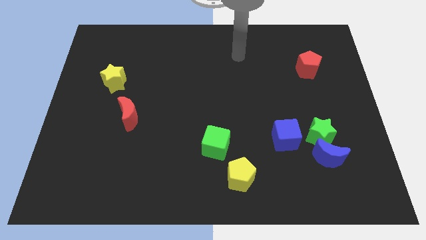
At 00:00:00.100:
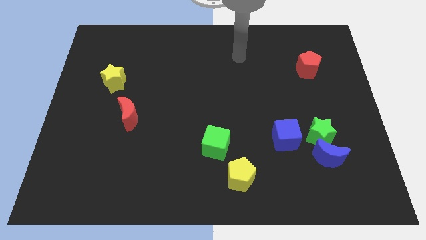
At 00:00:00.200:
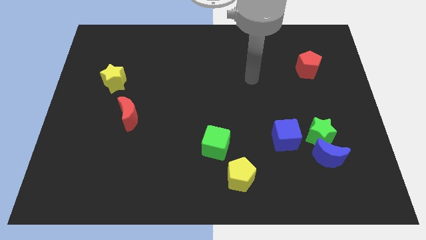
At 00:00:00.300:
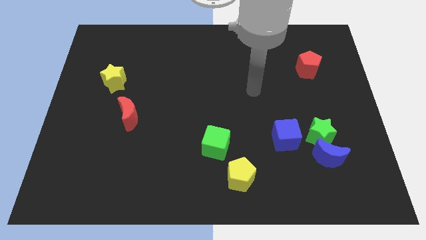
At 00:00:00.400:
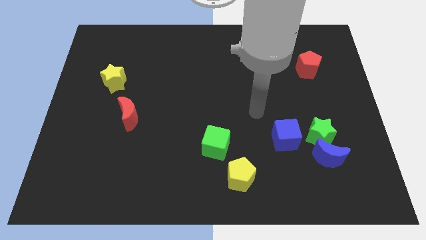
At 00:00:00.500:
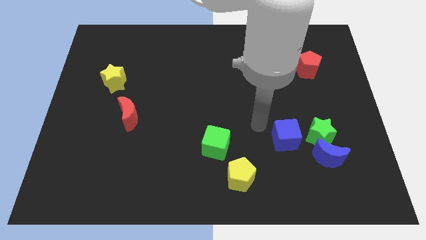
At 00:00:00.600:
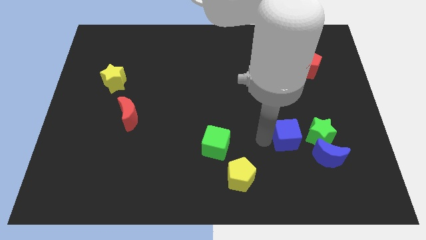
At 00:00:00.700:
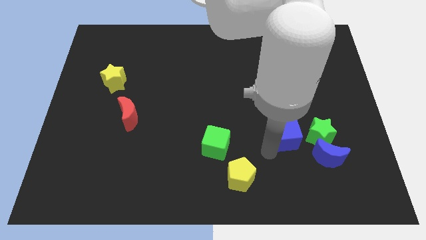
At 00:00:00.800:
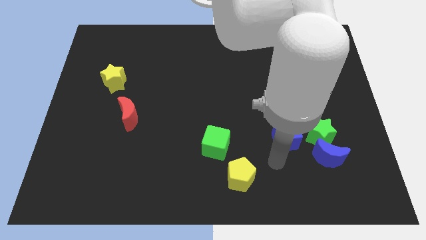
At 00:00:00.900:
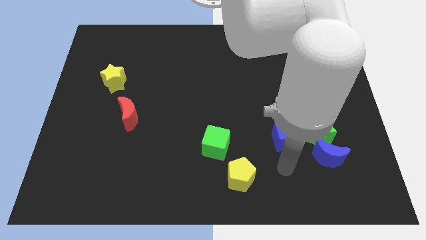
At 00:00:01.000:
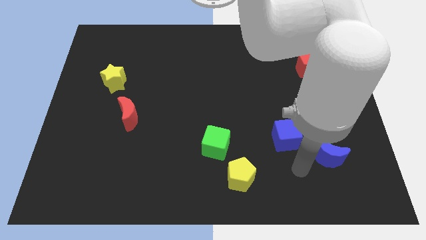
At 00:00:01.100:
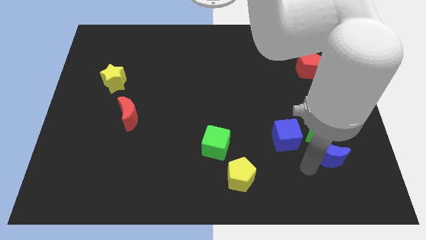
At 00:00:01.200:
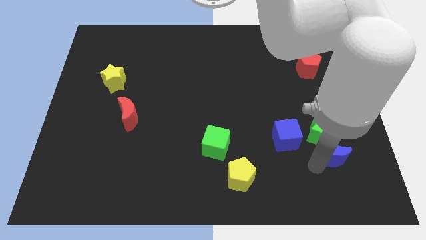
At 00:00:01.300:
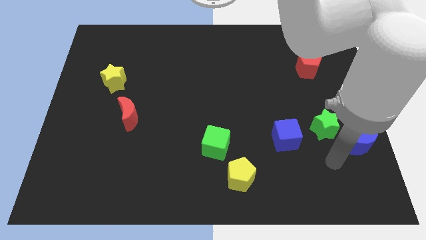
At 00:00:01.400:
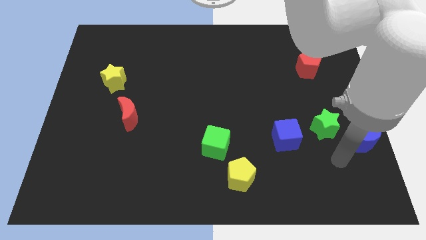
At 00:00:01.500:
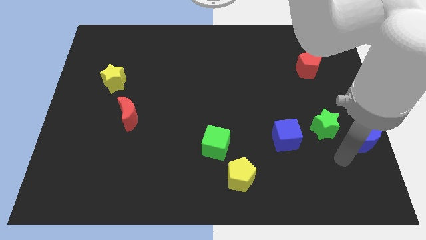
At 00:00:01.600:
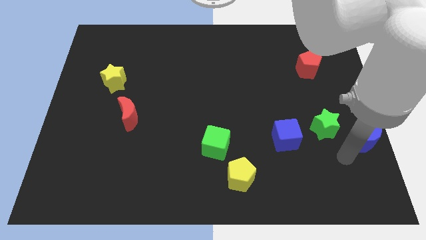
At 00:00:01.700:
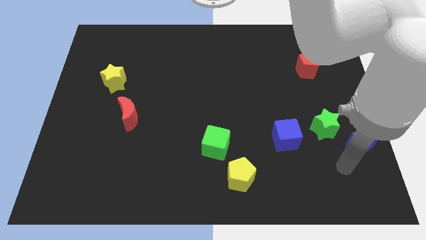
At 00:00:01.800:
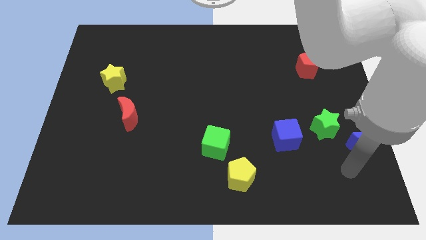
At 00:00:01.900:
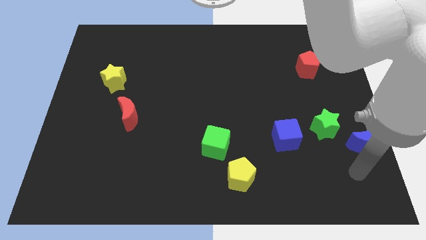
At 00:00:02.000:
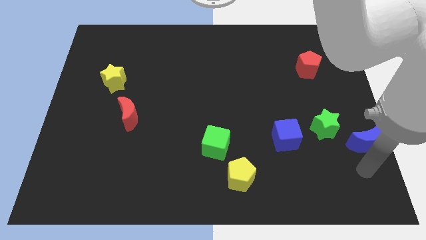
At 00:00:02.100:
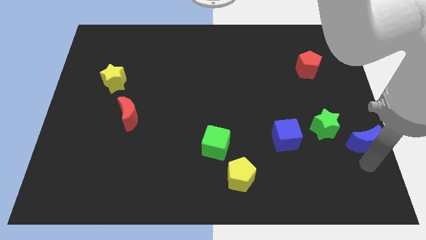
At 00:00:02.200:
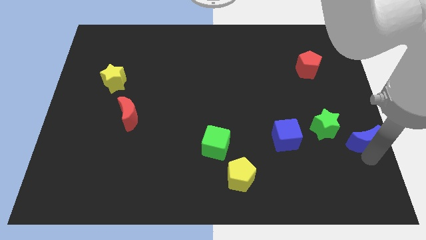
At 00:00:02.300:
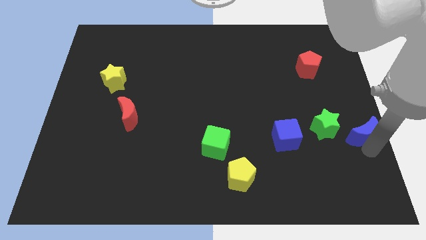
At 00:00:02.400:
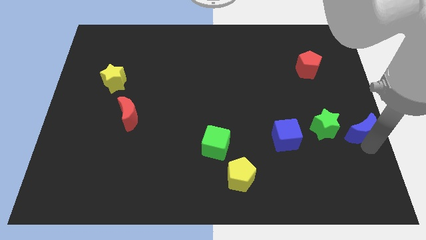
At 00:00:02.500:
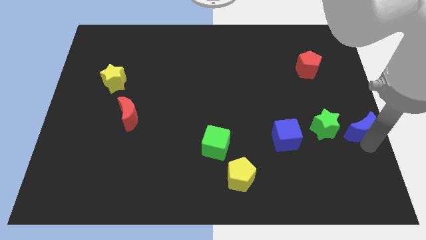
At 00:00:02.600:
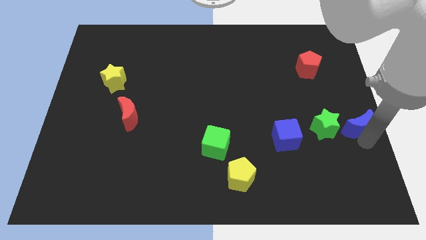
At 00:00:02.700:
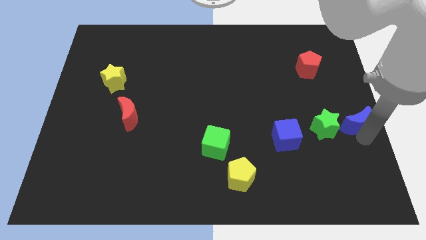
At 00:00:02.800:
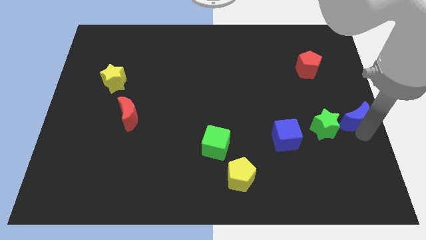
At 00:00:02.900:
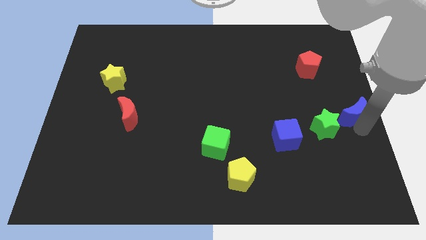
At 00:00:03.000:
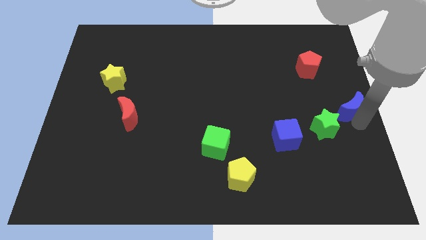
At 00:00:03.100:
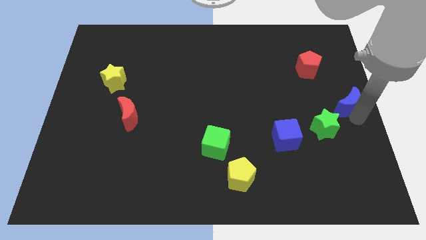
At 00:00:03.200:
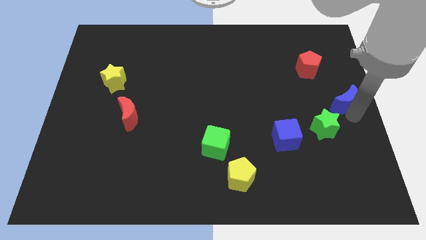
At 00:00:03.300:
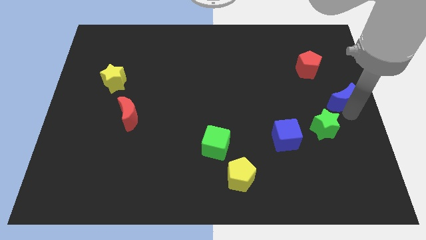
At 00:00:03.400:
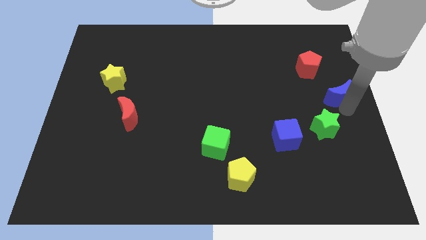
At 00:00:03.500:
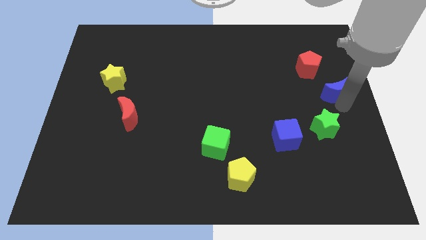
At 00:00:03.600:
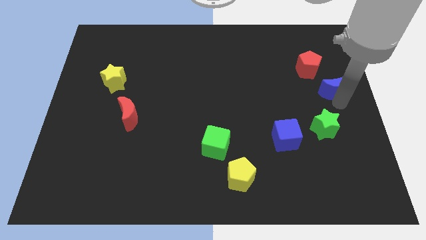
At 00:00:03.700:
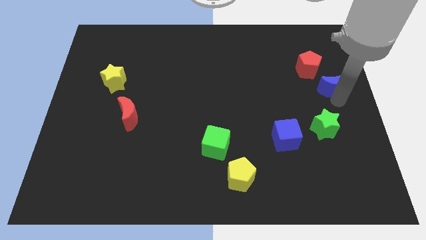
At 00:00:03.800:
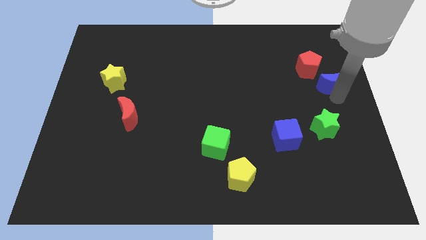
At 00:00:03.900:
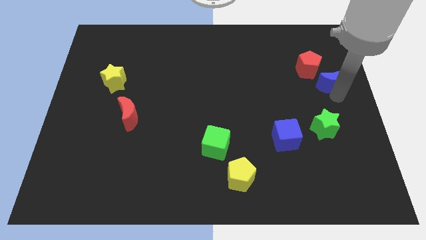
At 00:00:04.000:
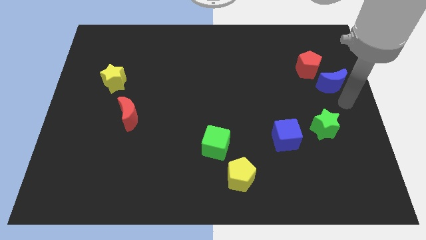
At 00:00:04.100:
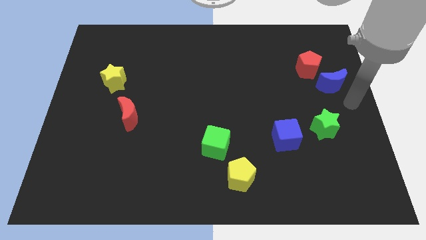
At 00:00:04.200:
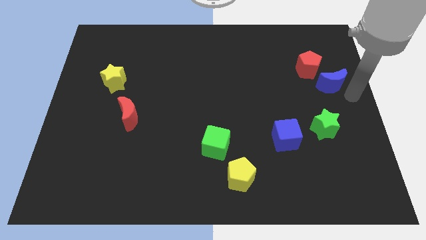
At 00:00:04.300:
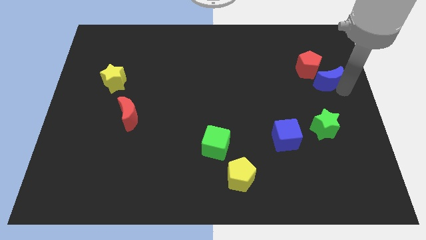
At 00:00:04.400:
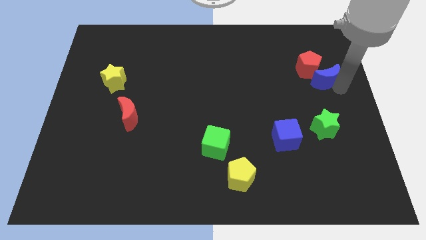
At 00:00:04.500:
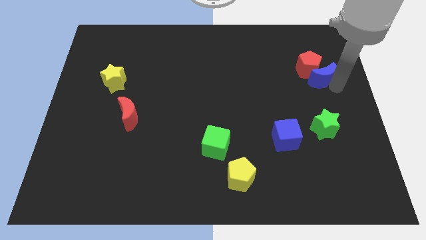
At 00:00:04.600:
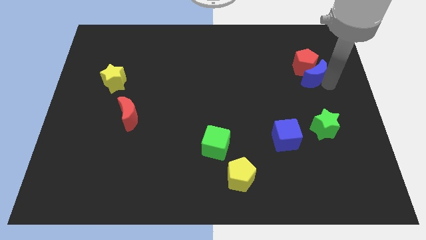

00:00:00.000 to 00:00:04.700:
put the blue moon next to the red pentagon

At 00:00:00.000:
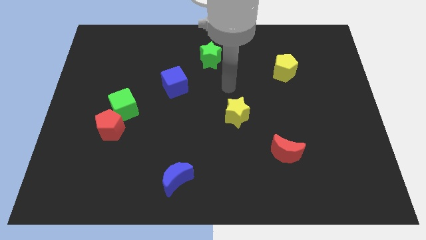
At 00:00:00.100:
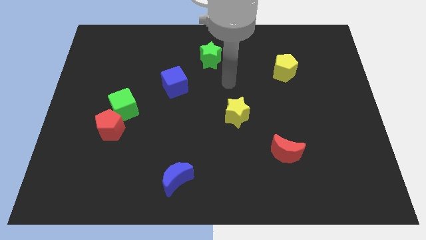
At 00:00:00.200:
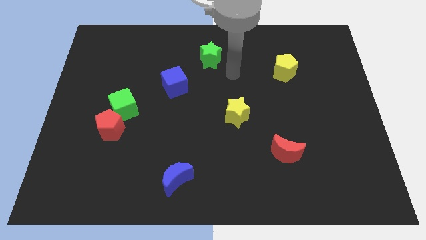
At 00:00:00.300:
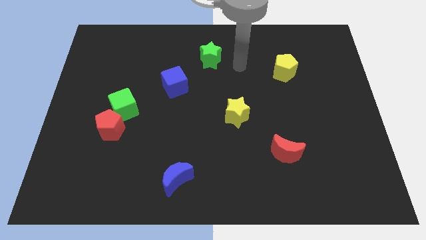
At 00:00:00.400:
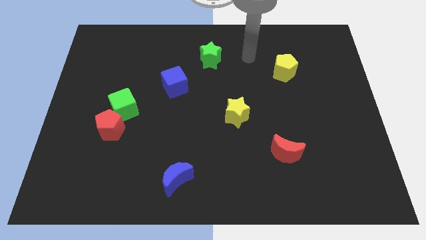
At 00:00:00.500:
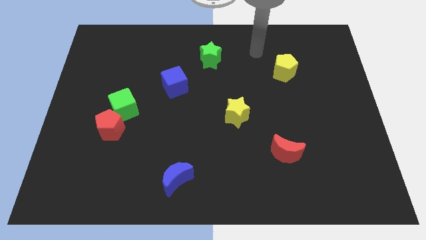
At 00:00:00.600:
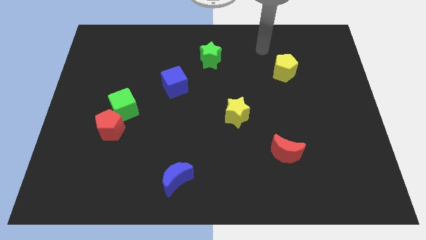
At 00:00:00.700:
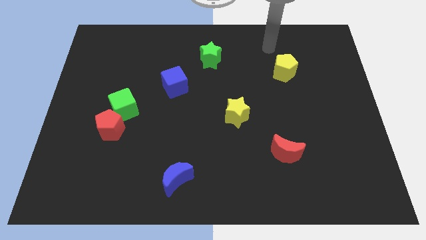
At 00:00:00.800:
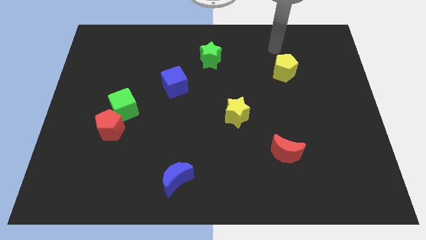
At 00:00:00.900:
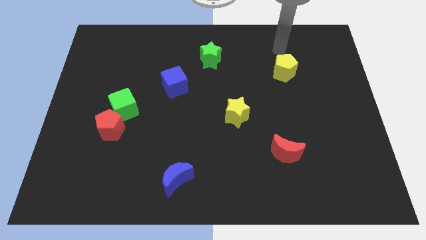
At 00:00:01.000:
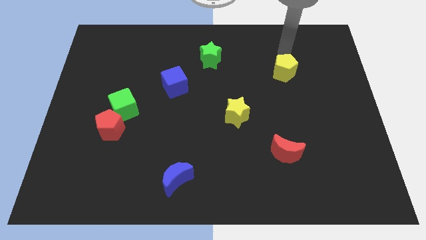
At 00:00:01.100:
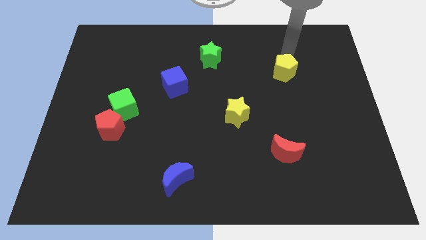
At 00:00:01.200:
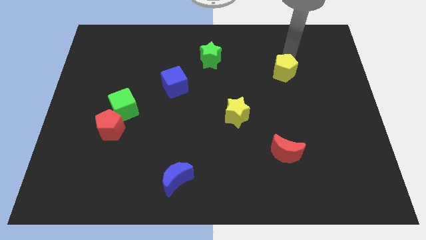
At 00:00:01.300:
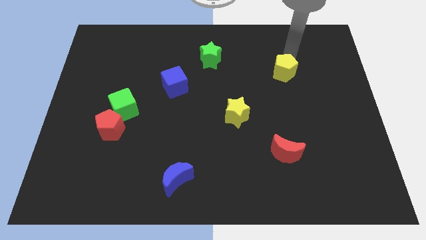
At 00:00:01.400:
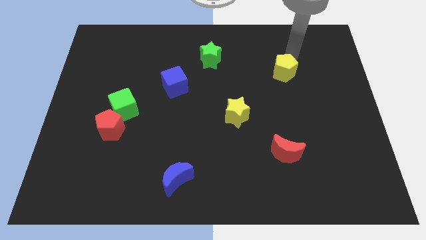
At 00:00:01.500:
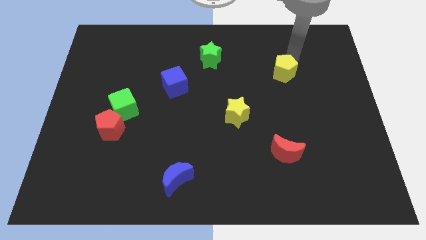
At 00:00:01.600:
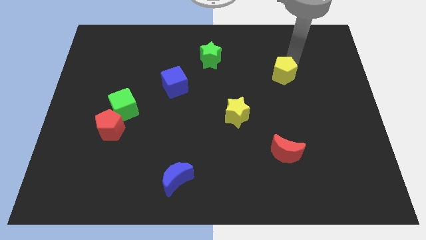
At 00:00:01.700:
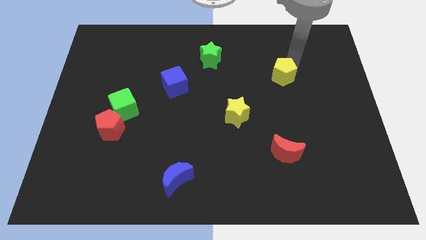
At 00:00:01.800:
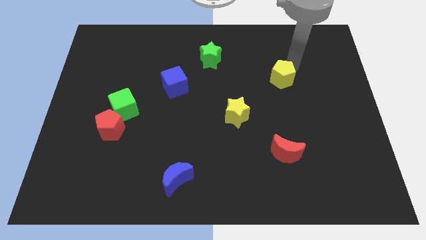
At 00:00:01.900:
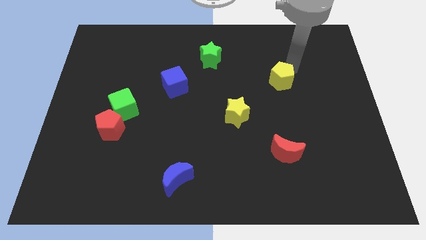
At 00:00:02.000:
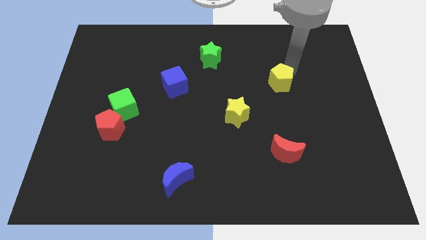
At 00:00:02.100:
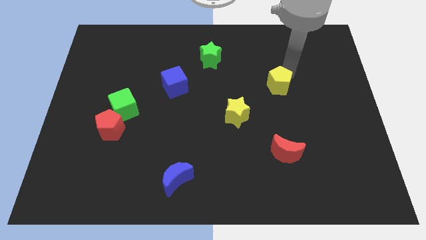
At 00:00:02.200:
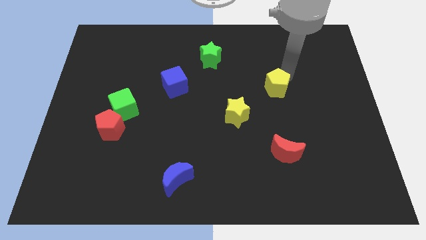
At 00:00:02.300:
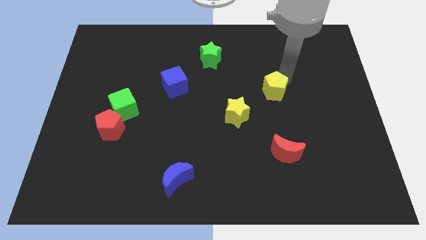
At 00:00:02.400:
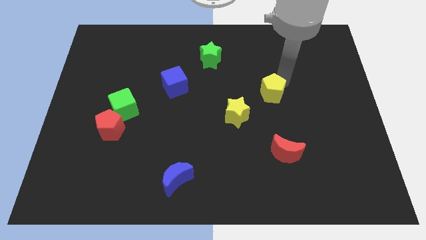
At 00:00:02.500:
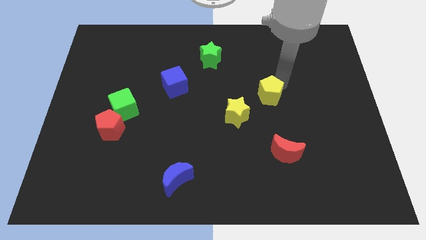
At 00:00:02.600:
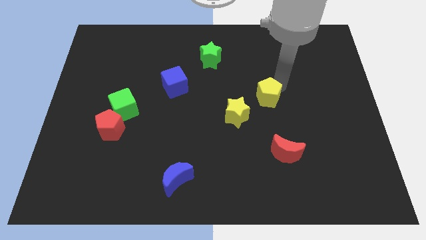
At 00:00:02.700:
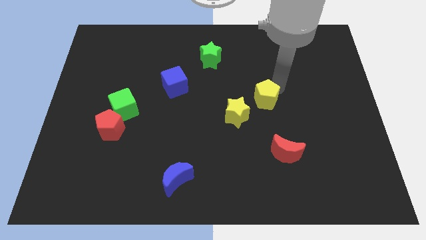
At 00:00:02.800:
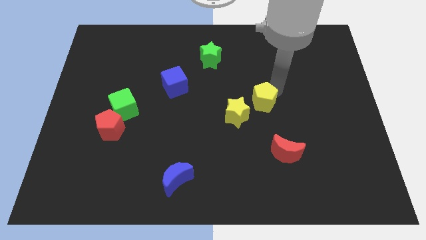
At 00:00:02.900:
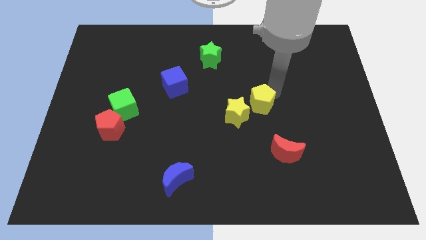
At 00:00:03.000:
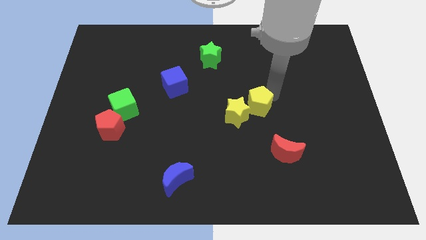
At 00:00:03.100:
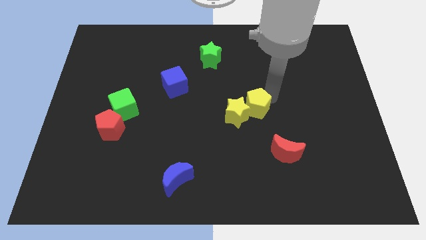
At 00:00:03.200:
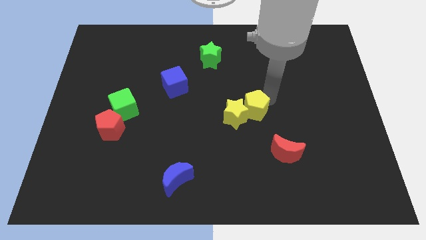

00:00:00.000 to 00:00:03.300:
slide the yellow pentagon to the yellow star

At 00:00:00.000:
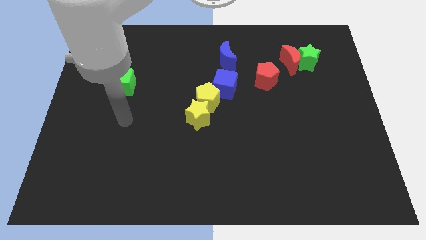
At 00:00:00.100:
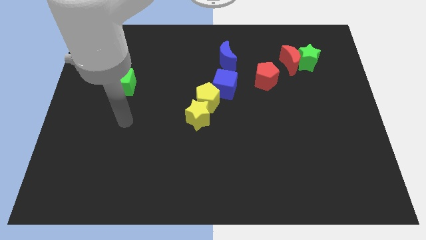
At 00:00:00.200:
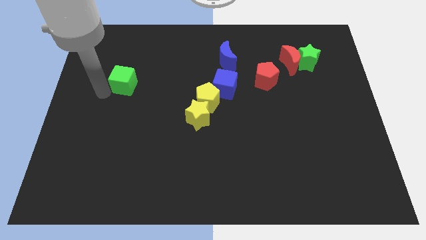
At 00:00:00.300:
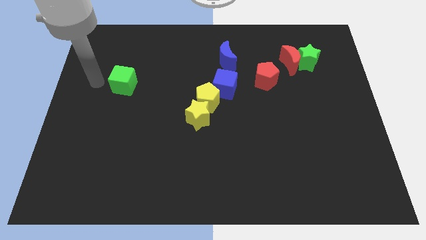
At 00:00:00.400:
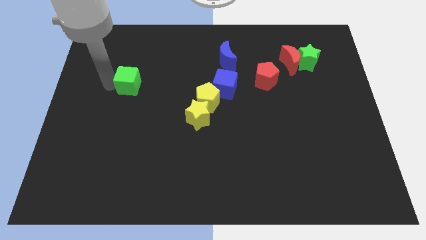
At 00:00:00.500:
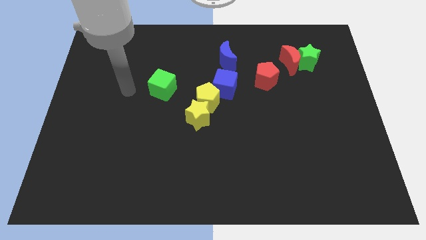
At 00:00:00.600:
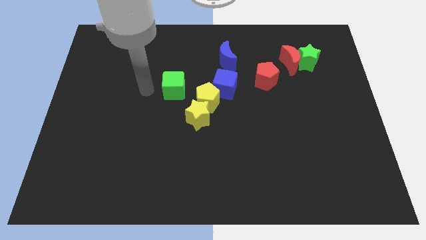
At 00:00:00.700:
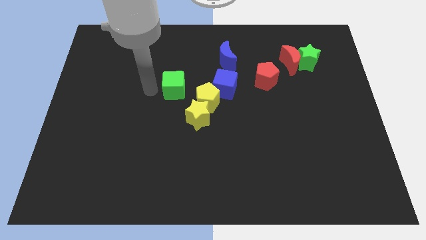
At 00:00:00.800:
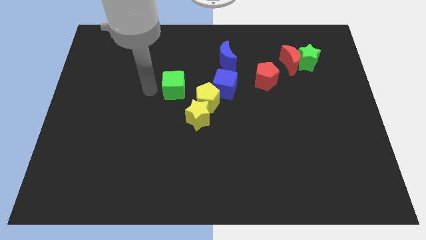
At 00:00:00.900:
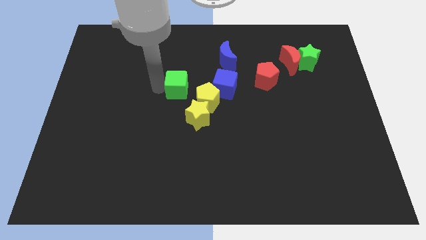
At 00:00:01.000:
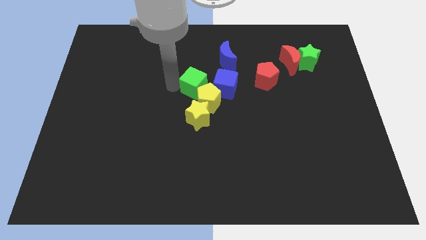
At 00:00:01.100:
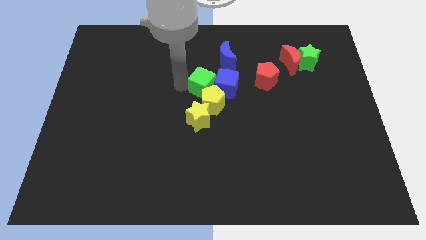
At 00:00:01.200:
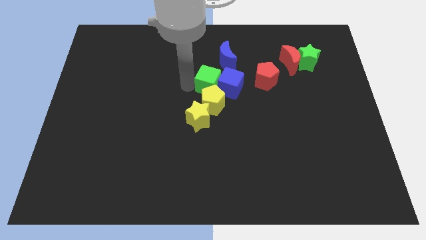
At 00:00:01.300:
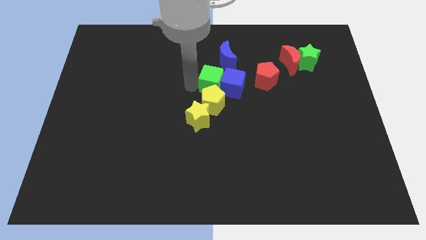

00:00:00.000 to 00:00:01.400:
put the green cube to the blue cube
